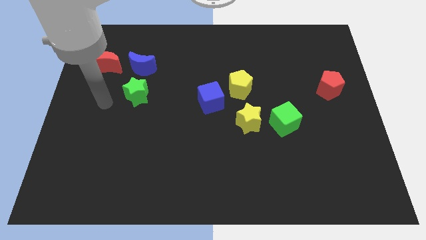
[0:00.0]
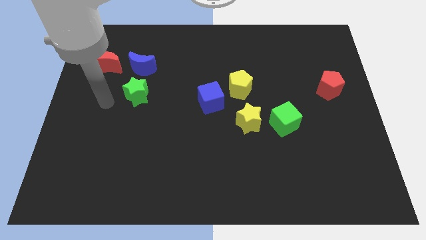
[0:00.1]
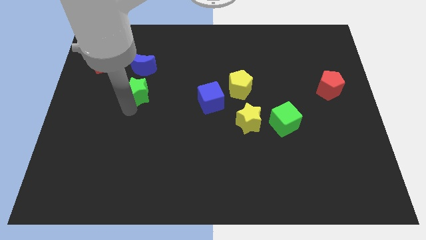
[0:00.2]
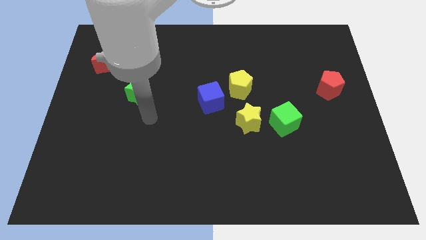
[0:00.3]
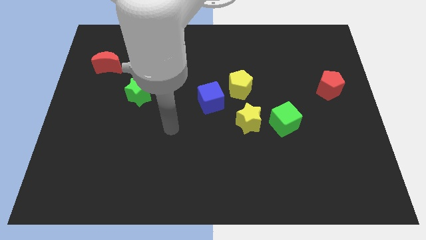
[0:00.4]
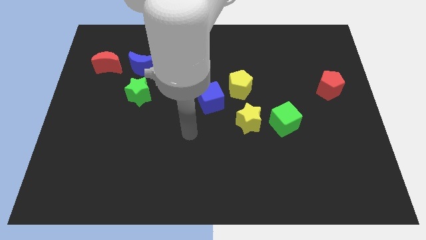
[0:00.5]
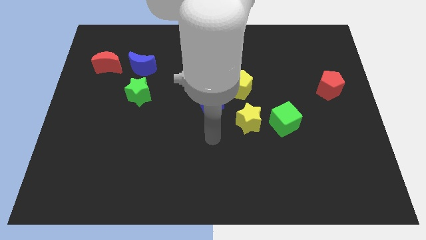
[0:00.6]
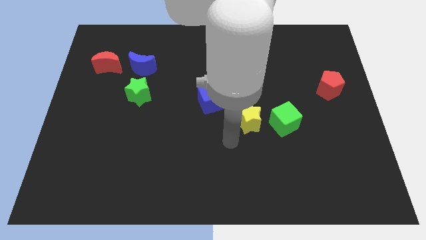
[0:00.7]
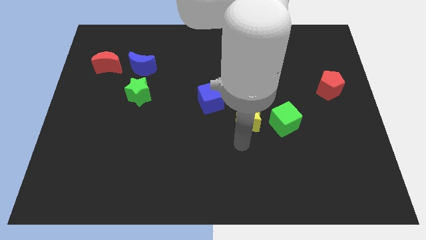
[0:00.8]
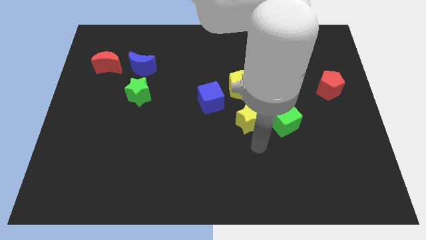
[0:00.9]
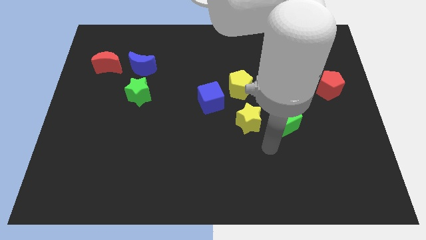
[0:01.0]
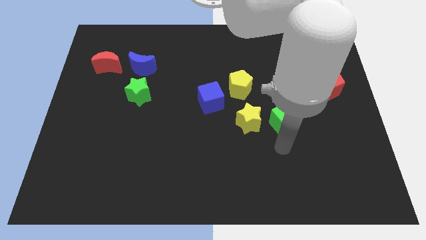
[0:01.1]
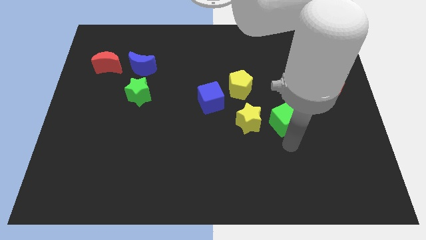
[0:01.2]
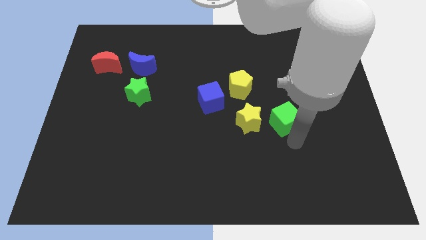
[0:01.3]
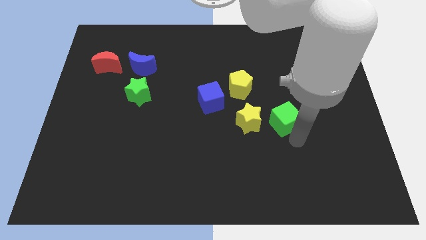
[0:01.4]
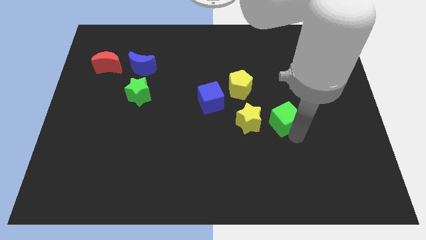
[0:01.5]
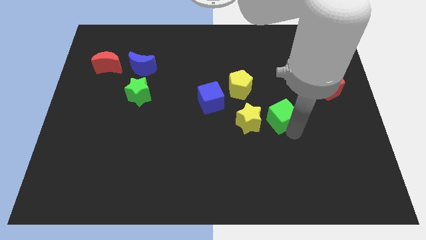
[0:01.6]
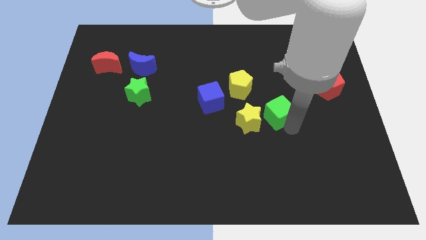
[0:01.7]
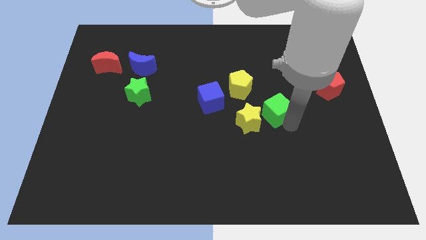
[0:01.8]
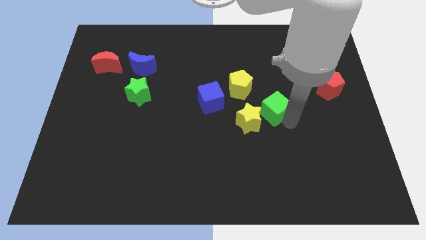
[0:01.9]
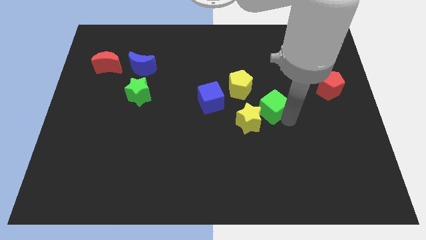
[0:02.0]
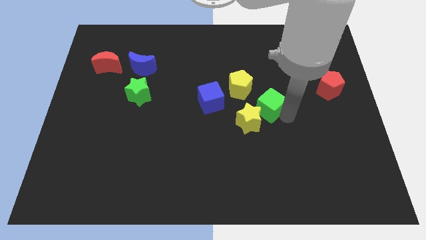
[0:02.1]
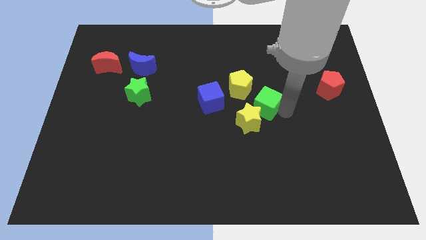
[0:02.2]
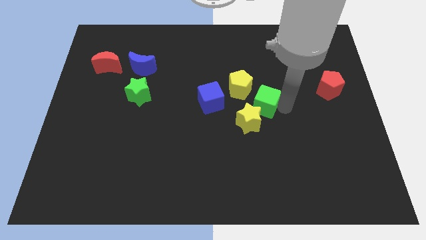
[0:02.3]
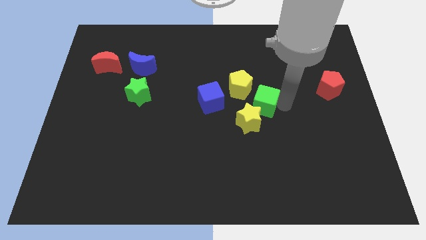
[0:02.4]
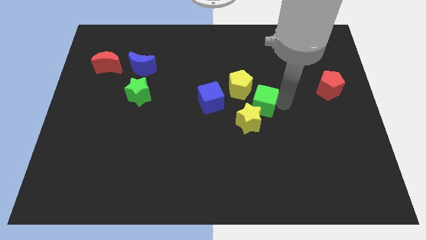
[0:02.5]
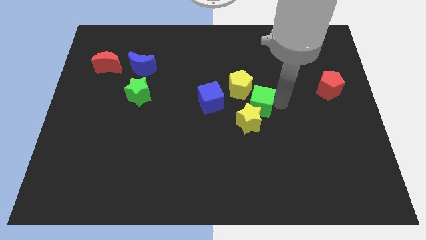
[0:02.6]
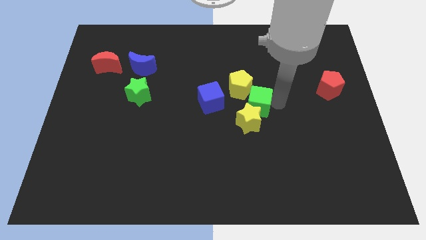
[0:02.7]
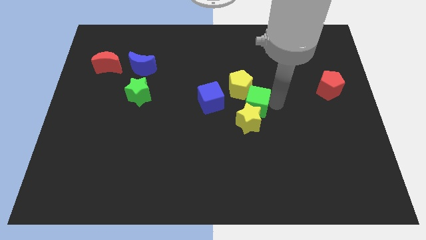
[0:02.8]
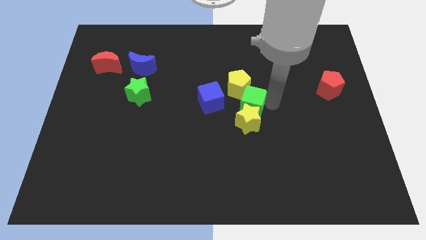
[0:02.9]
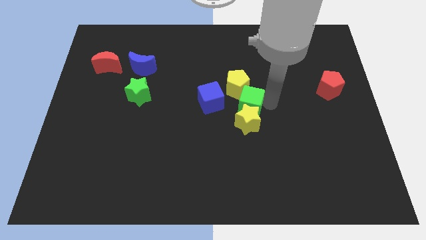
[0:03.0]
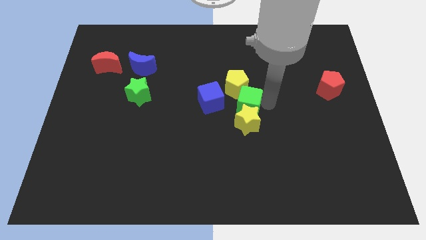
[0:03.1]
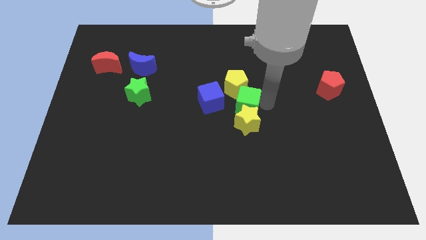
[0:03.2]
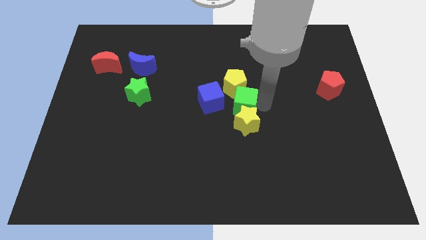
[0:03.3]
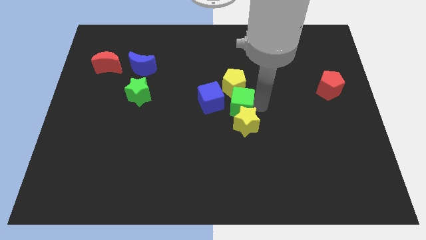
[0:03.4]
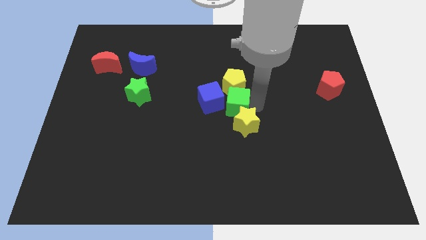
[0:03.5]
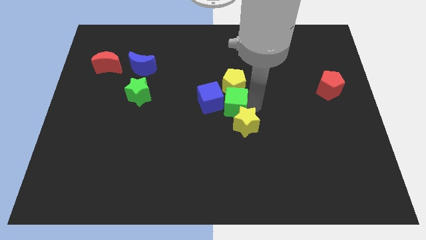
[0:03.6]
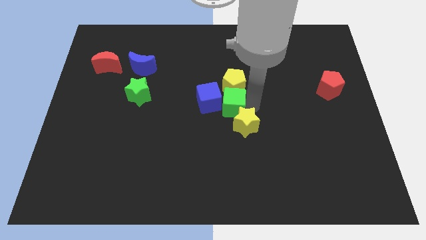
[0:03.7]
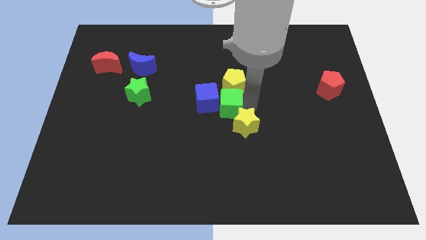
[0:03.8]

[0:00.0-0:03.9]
push the green cube close to the blue cube

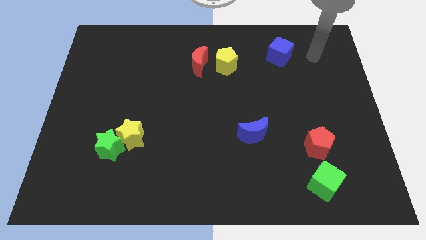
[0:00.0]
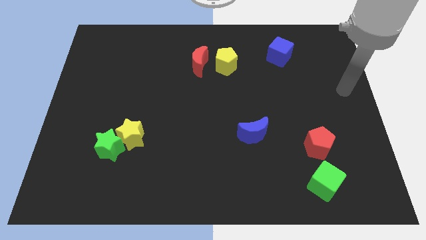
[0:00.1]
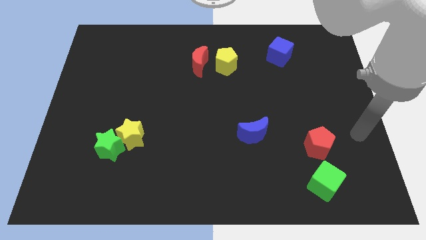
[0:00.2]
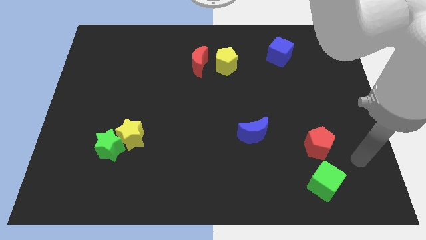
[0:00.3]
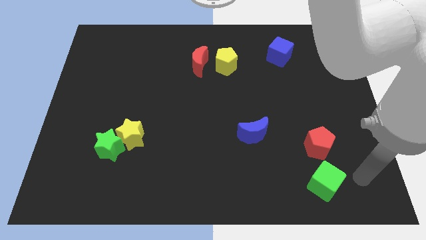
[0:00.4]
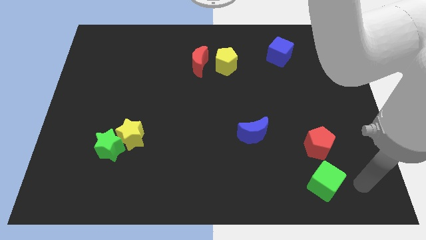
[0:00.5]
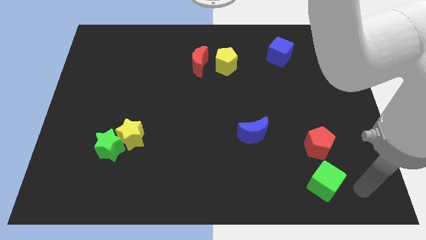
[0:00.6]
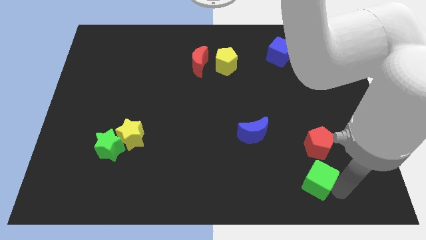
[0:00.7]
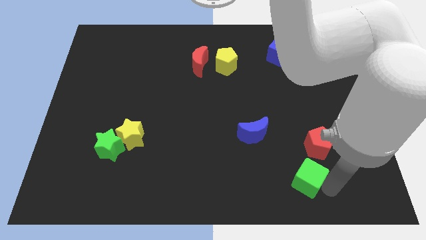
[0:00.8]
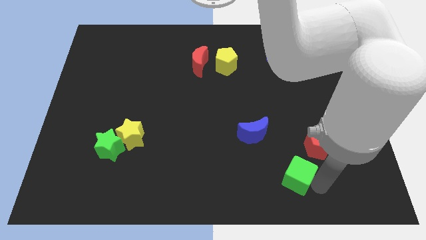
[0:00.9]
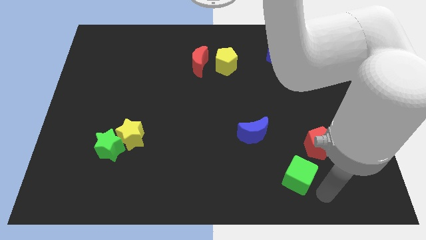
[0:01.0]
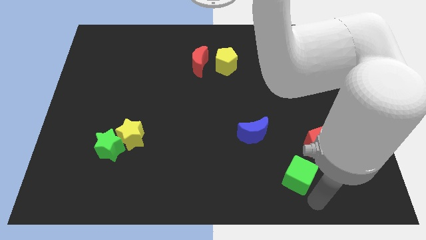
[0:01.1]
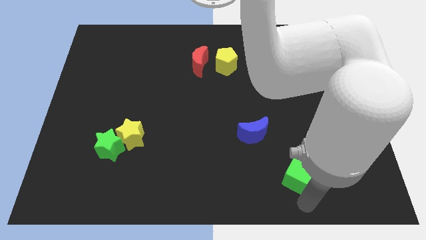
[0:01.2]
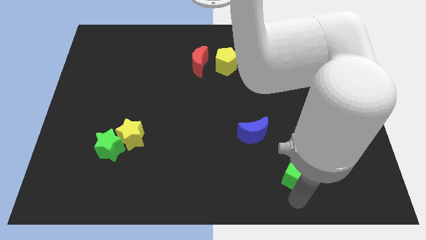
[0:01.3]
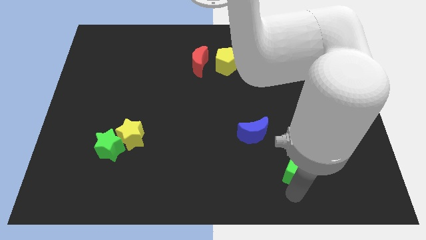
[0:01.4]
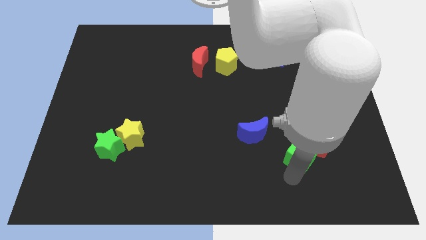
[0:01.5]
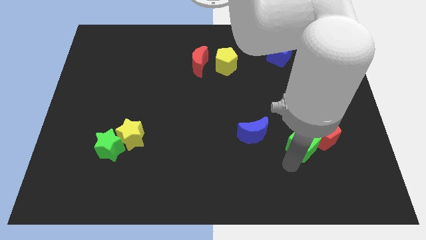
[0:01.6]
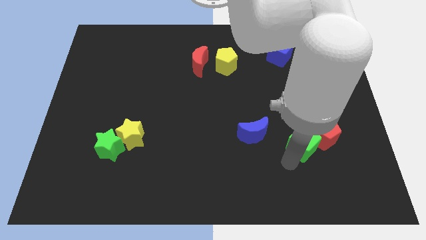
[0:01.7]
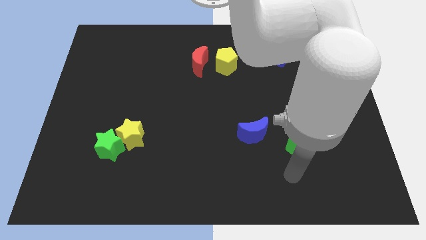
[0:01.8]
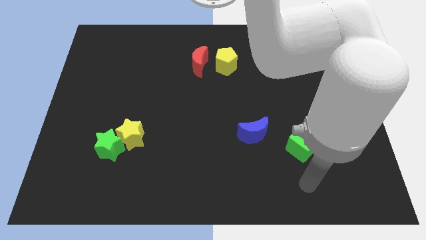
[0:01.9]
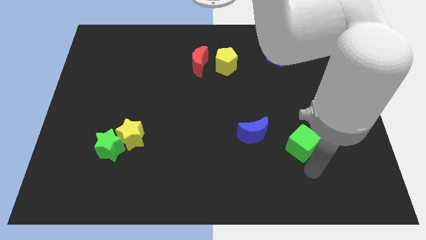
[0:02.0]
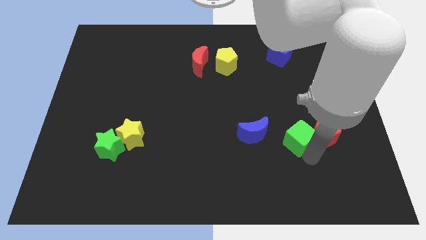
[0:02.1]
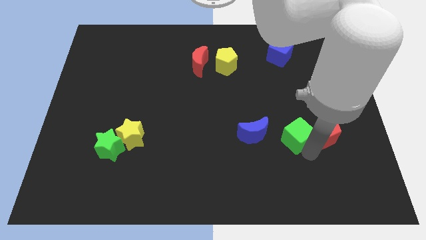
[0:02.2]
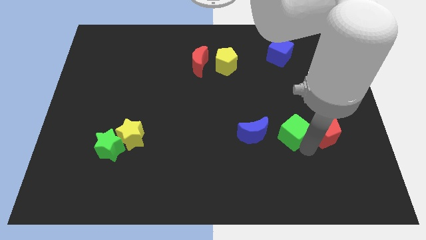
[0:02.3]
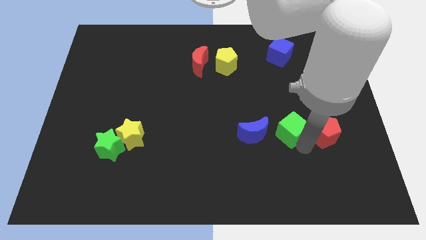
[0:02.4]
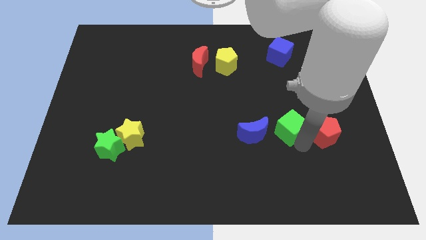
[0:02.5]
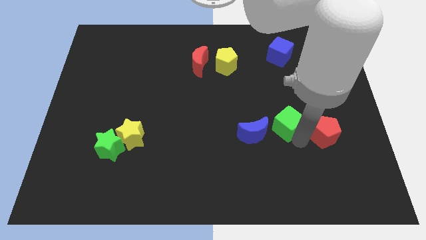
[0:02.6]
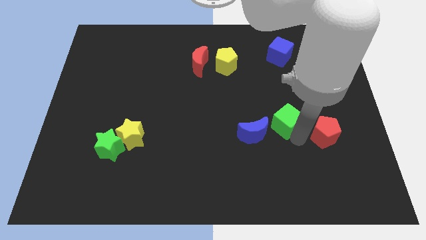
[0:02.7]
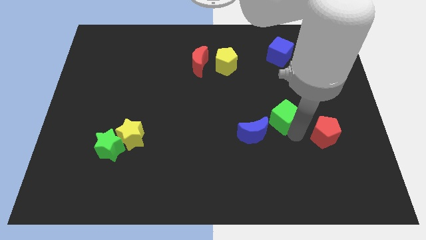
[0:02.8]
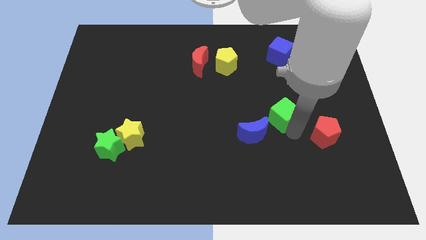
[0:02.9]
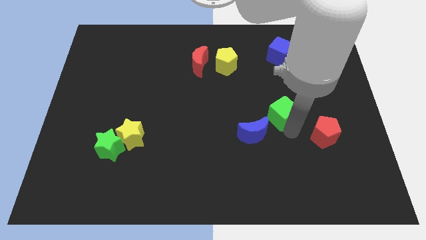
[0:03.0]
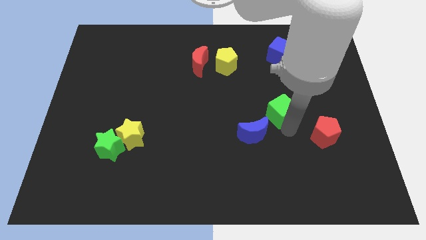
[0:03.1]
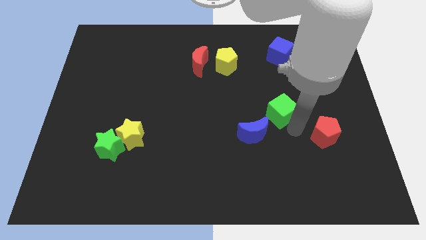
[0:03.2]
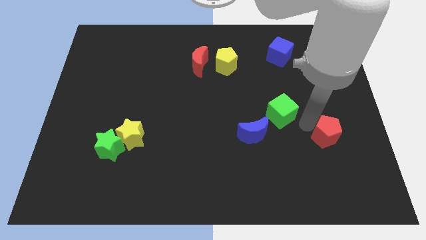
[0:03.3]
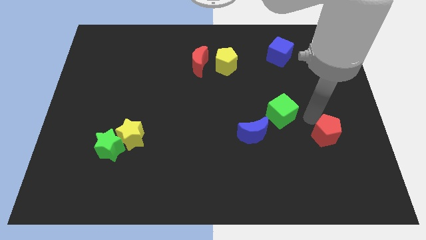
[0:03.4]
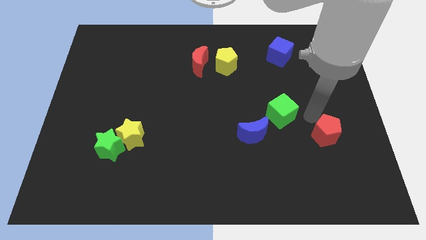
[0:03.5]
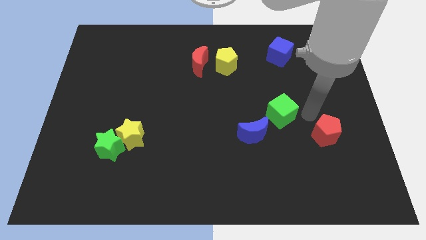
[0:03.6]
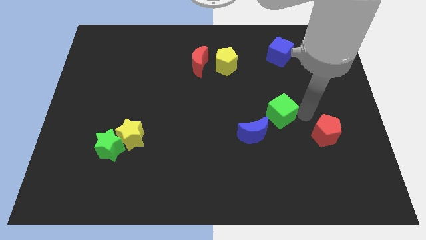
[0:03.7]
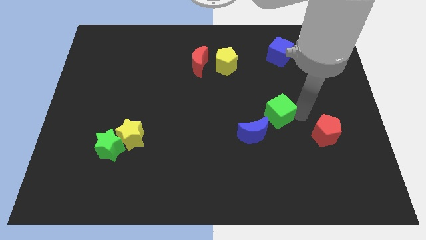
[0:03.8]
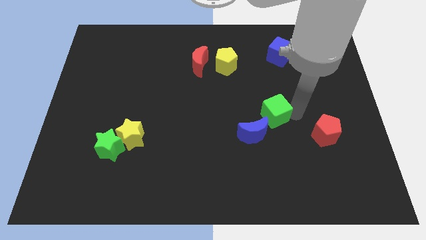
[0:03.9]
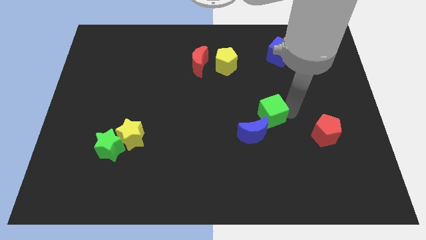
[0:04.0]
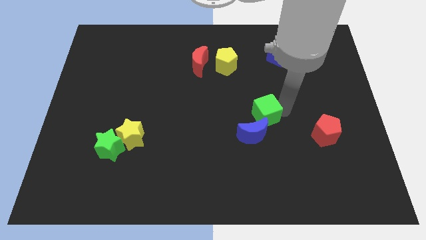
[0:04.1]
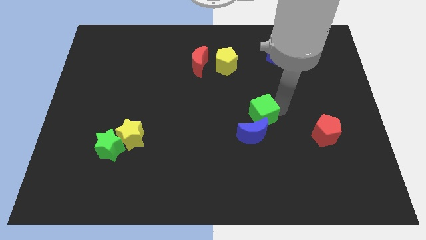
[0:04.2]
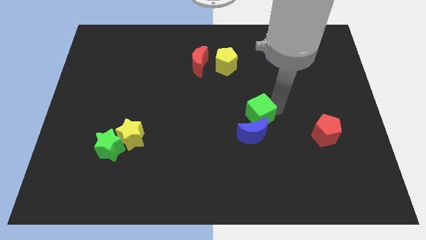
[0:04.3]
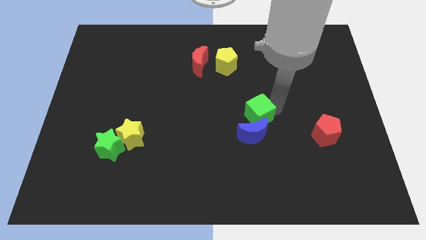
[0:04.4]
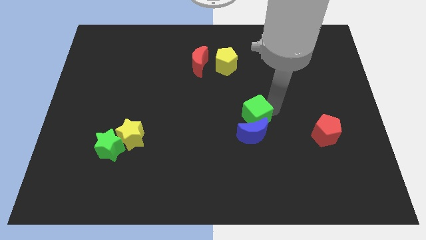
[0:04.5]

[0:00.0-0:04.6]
move the green cube to the blue moon
